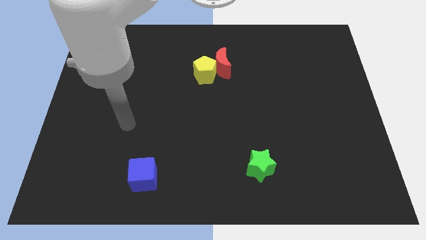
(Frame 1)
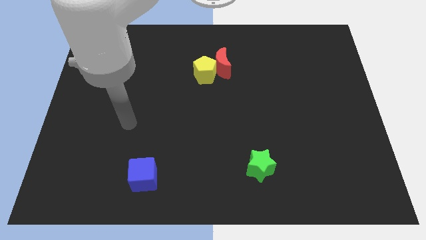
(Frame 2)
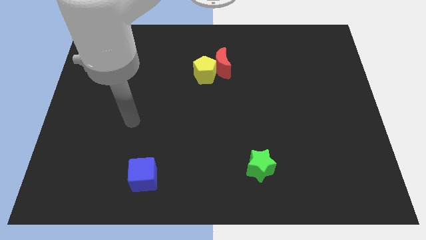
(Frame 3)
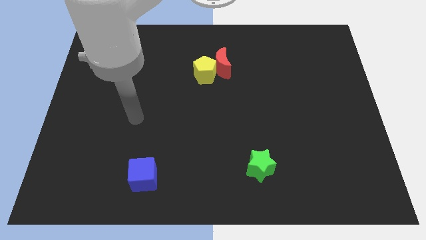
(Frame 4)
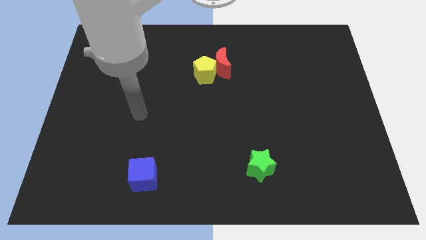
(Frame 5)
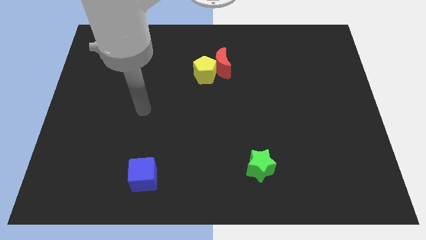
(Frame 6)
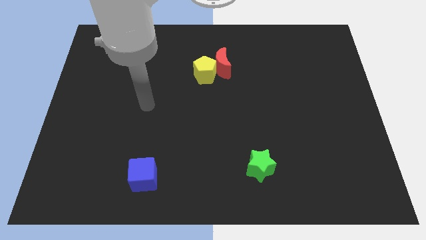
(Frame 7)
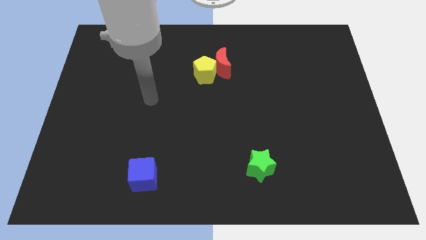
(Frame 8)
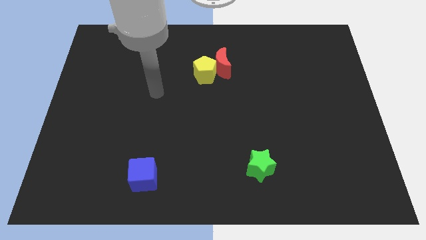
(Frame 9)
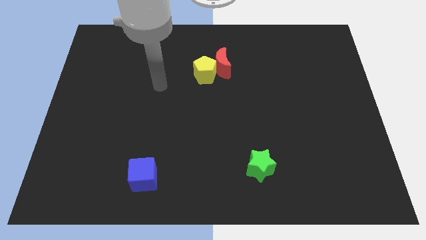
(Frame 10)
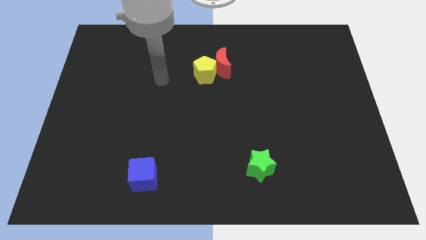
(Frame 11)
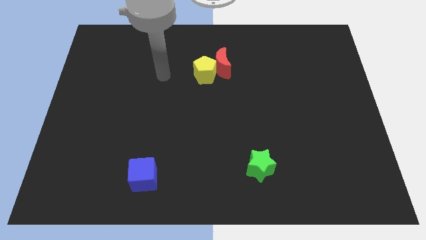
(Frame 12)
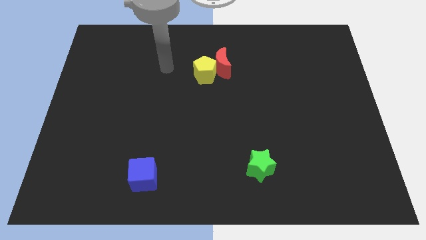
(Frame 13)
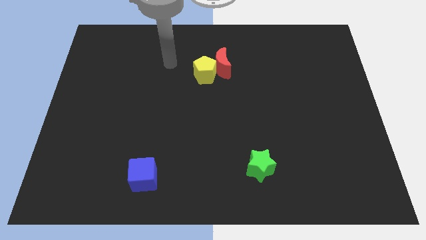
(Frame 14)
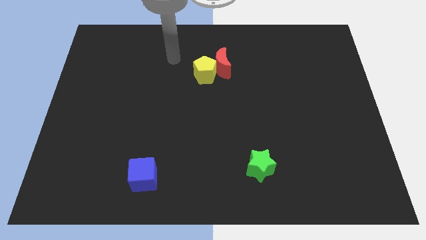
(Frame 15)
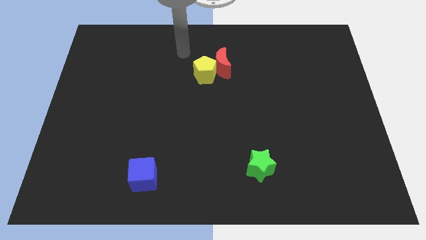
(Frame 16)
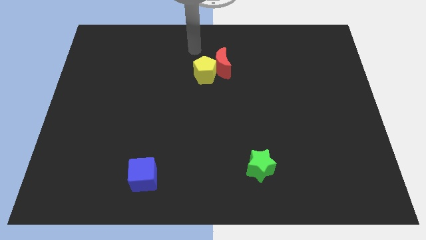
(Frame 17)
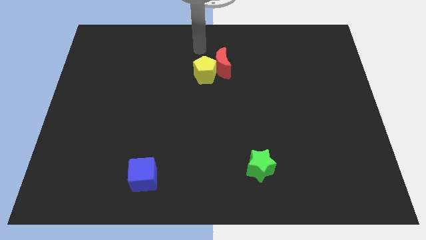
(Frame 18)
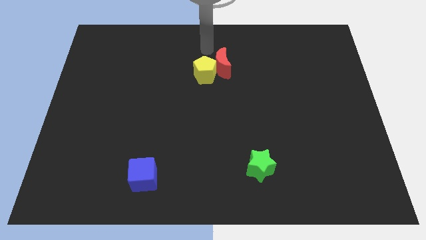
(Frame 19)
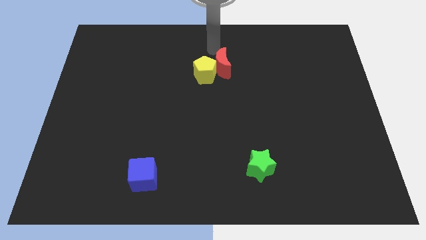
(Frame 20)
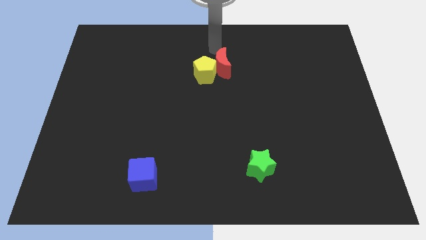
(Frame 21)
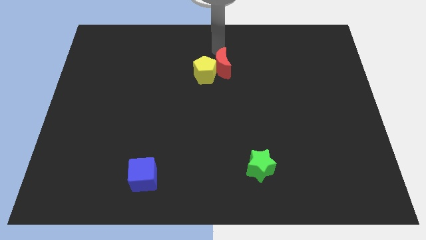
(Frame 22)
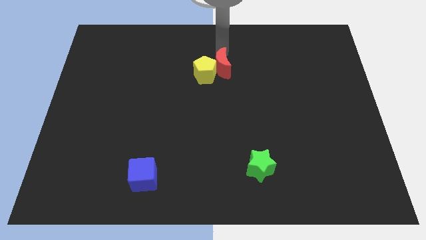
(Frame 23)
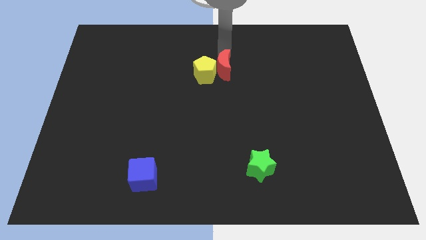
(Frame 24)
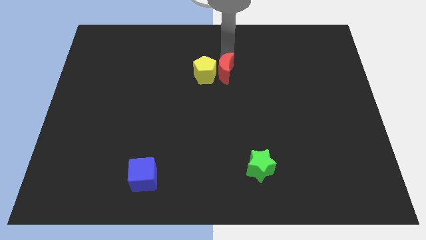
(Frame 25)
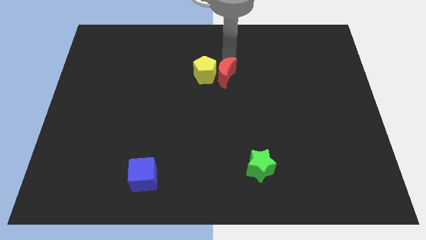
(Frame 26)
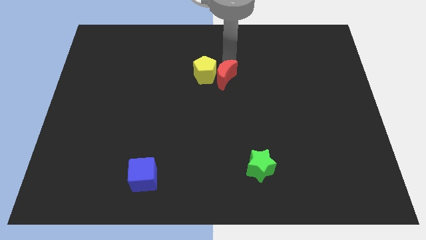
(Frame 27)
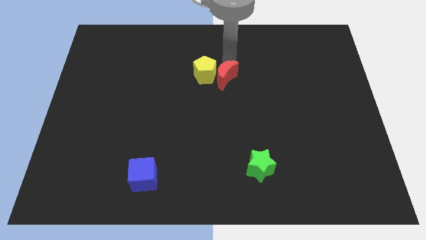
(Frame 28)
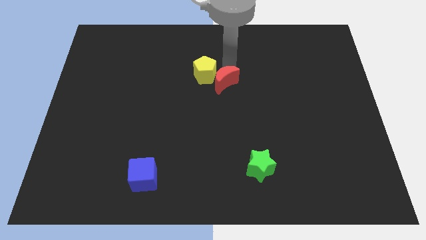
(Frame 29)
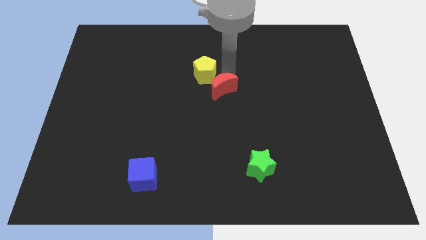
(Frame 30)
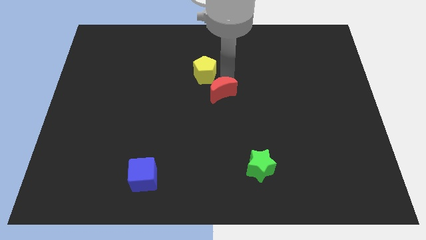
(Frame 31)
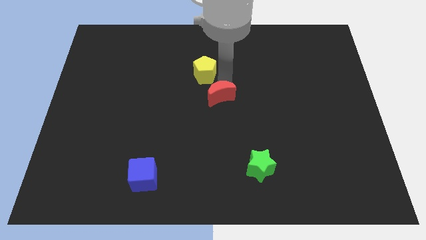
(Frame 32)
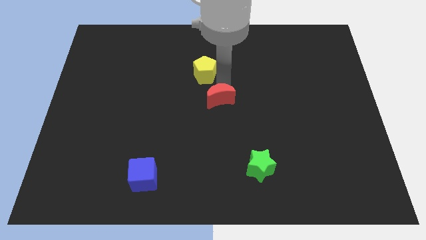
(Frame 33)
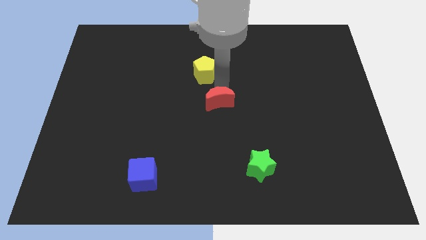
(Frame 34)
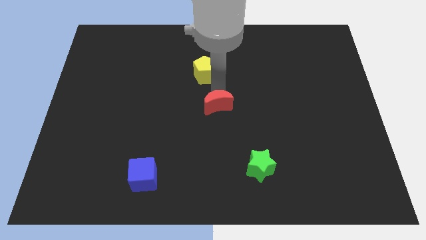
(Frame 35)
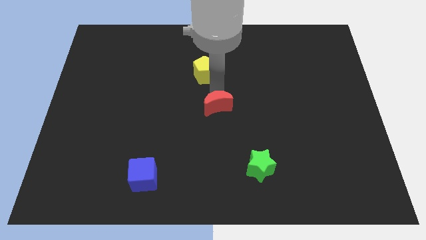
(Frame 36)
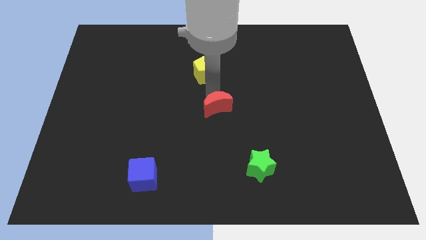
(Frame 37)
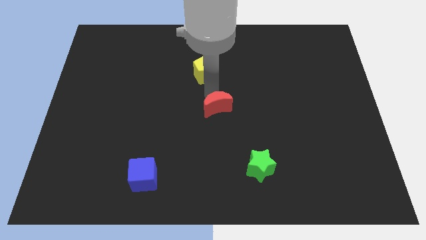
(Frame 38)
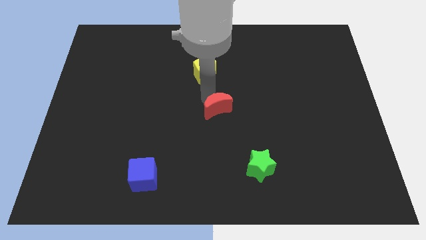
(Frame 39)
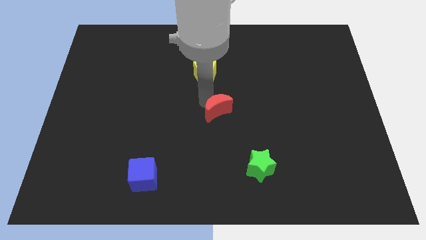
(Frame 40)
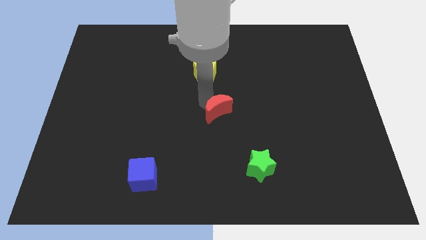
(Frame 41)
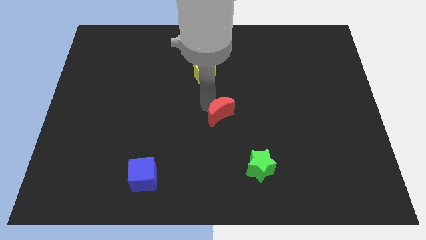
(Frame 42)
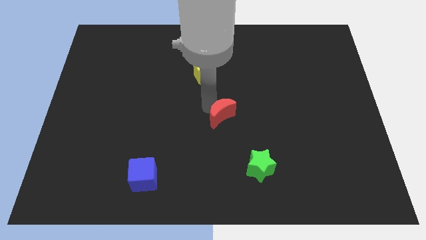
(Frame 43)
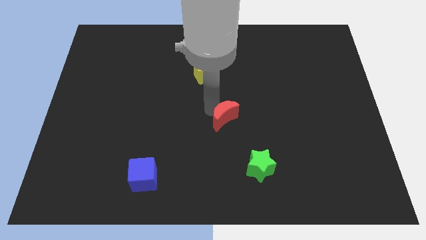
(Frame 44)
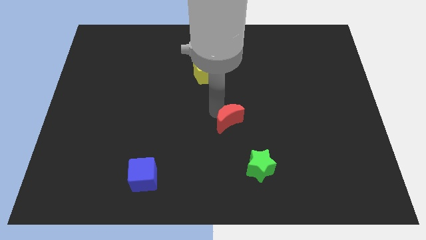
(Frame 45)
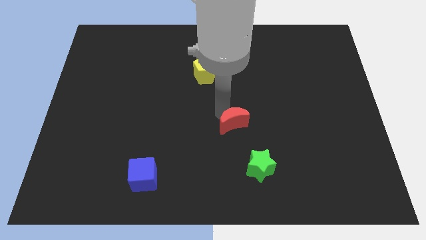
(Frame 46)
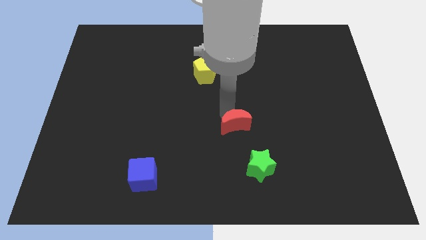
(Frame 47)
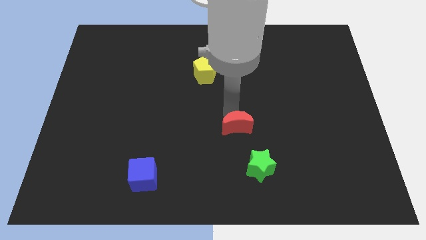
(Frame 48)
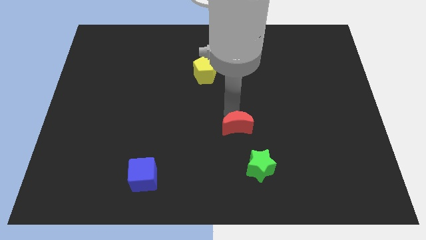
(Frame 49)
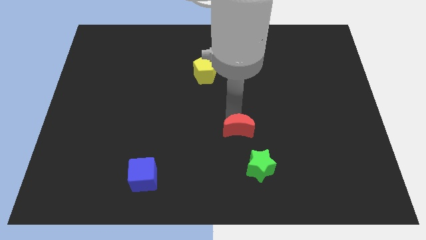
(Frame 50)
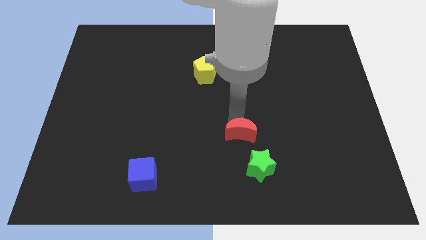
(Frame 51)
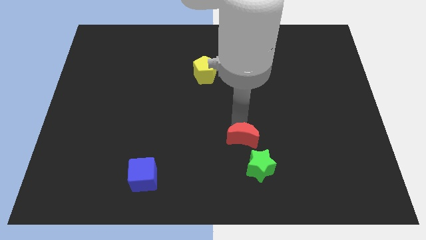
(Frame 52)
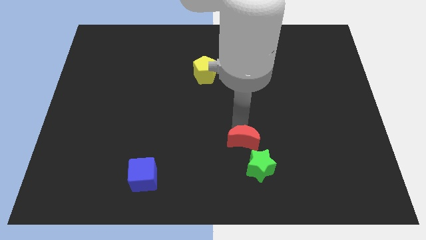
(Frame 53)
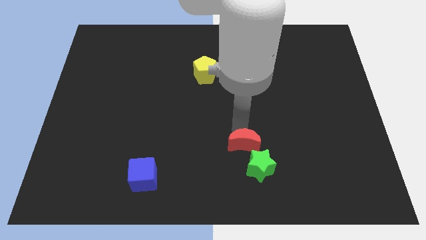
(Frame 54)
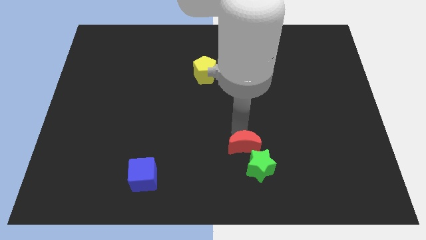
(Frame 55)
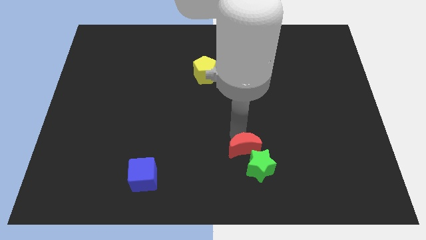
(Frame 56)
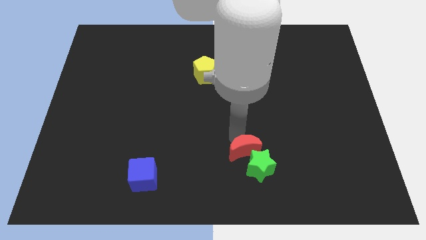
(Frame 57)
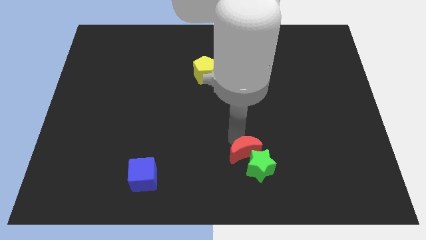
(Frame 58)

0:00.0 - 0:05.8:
move the red moon close to the star

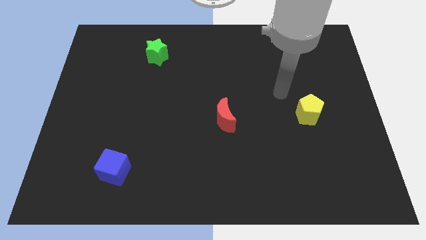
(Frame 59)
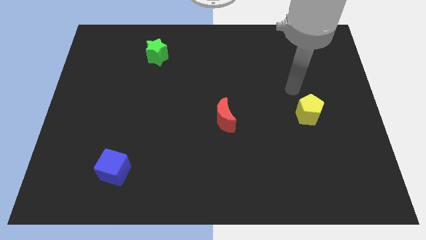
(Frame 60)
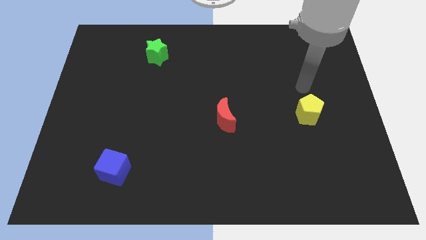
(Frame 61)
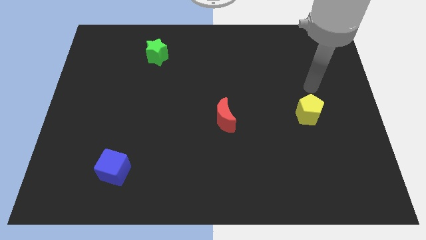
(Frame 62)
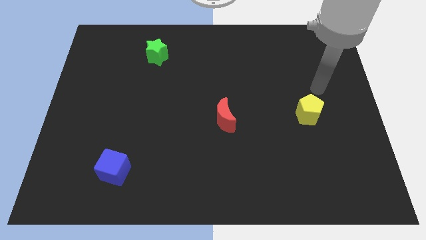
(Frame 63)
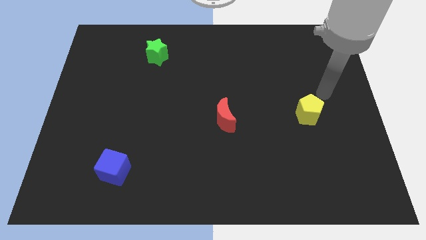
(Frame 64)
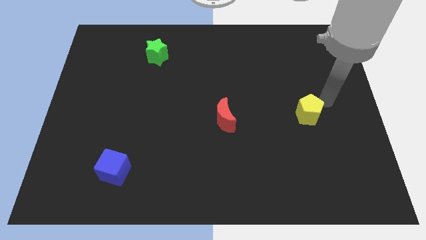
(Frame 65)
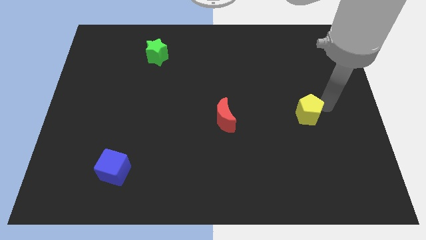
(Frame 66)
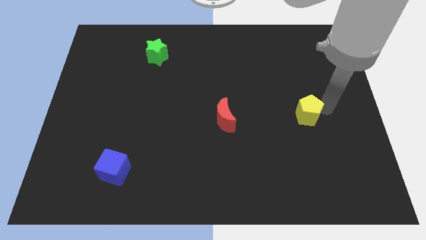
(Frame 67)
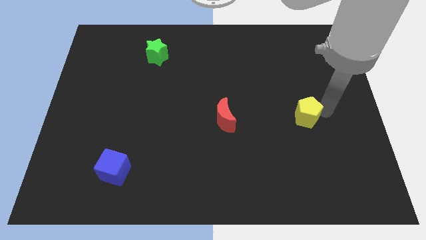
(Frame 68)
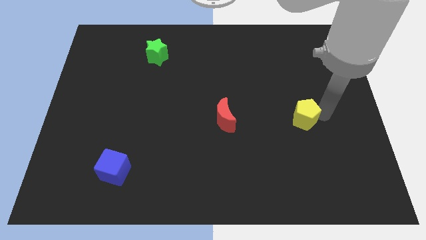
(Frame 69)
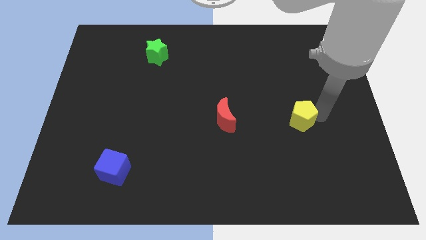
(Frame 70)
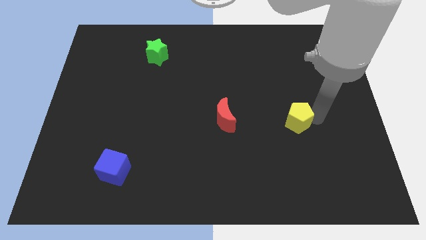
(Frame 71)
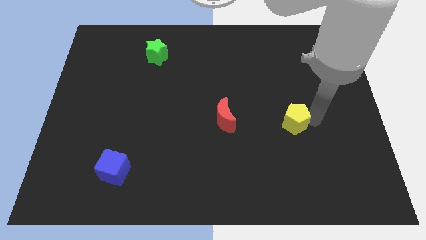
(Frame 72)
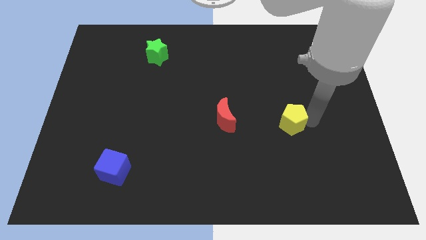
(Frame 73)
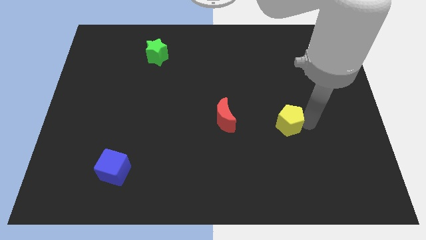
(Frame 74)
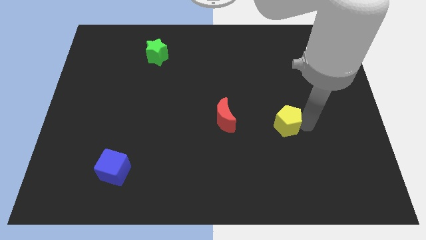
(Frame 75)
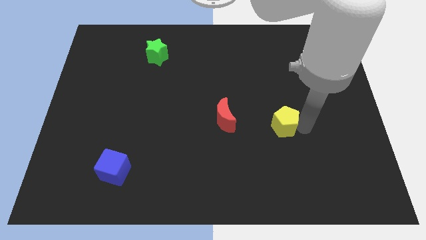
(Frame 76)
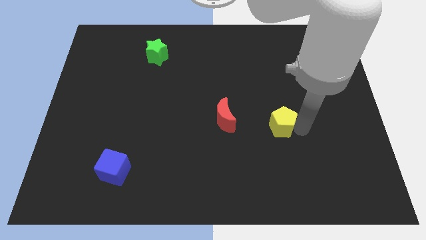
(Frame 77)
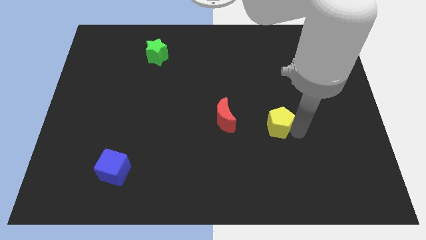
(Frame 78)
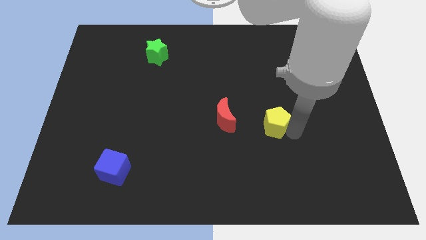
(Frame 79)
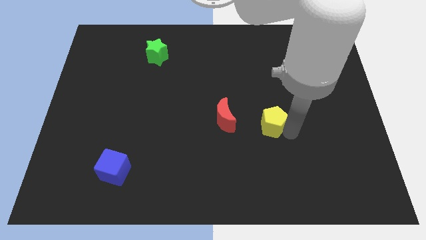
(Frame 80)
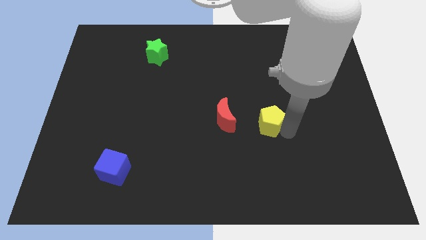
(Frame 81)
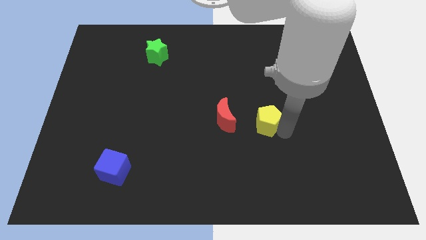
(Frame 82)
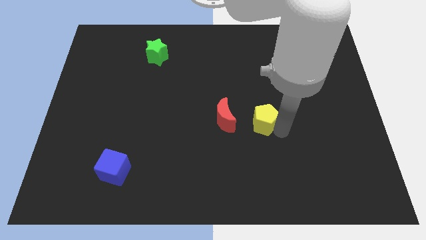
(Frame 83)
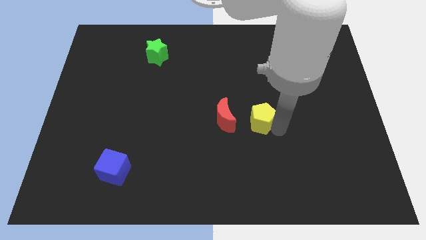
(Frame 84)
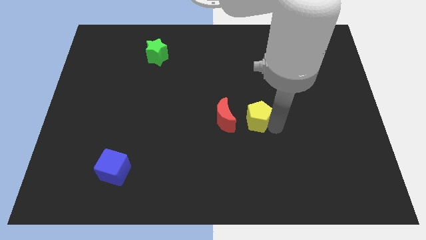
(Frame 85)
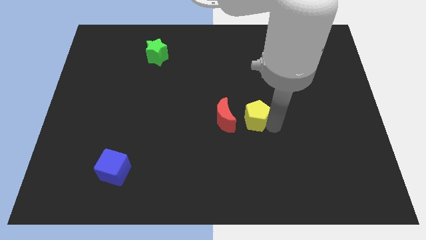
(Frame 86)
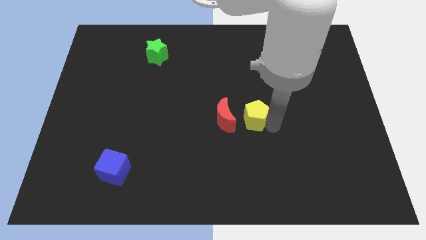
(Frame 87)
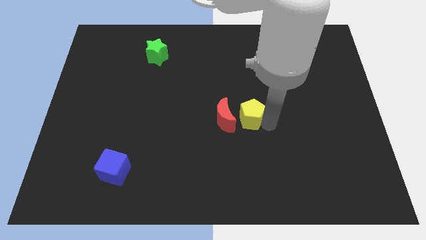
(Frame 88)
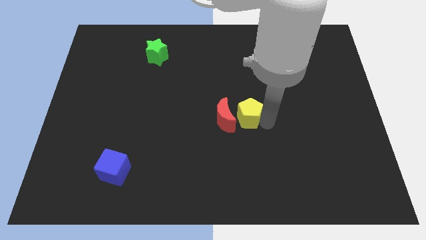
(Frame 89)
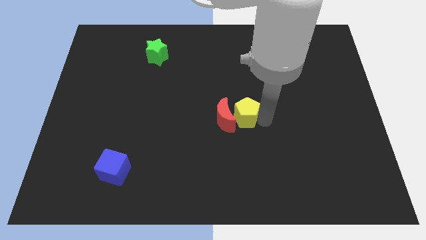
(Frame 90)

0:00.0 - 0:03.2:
slide the yellow pentagon to the red moon
